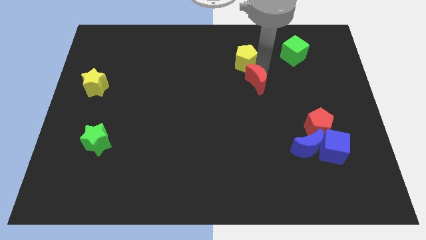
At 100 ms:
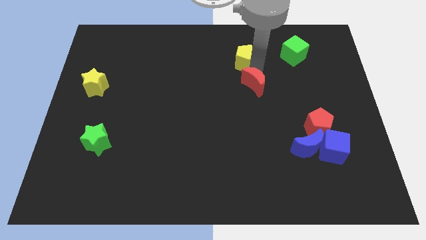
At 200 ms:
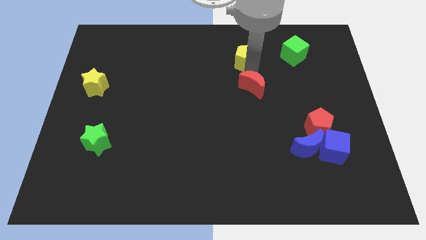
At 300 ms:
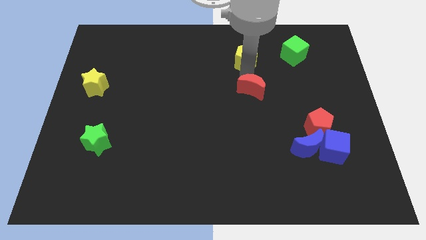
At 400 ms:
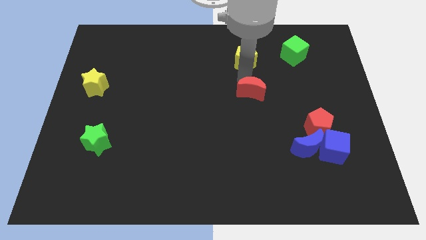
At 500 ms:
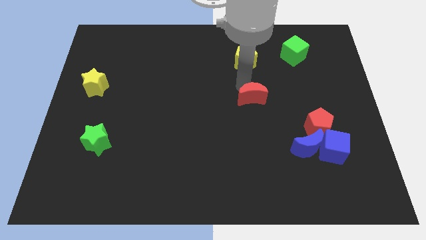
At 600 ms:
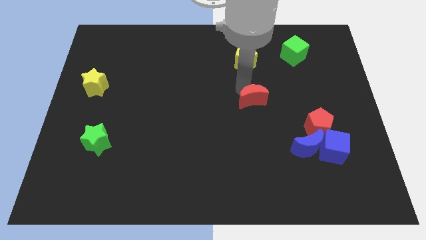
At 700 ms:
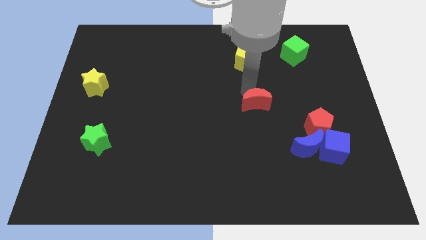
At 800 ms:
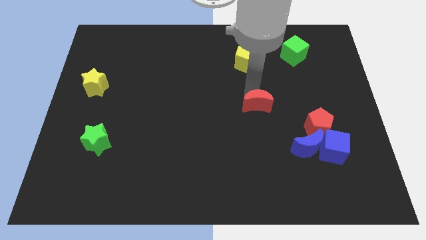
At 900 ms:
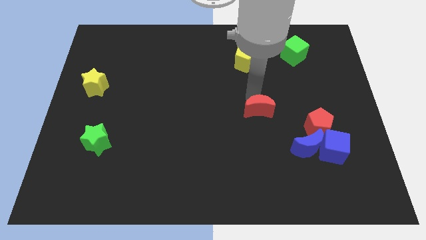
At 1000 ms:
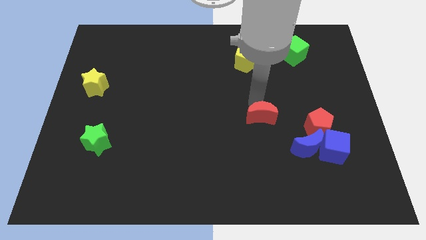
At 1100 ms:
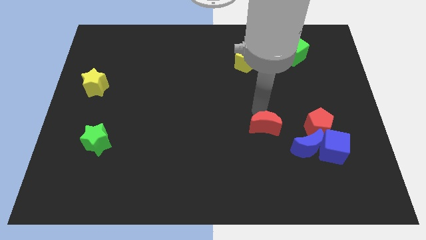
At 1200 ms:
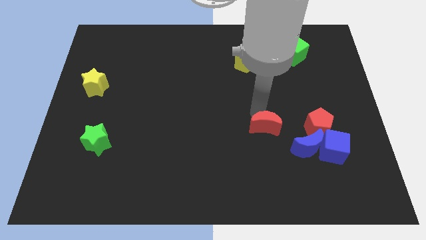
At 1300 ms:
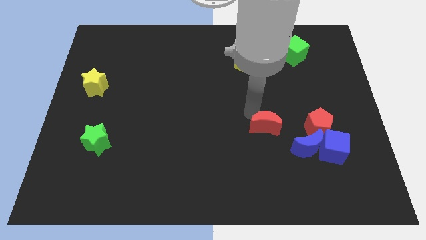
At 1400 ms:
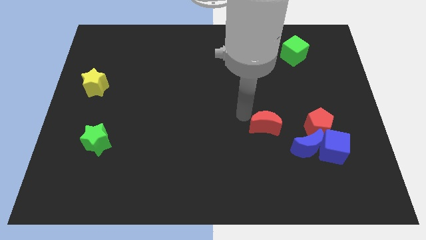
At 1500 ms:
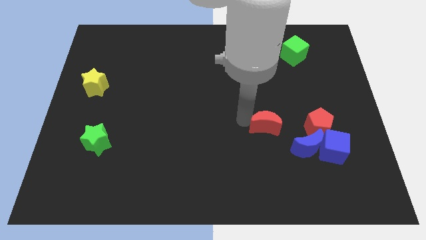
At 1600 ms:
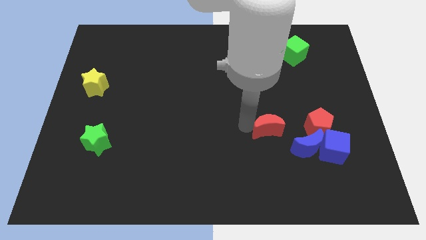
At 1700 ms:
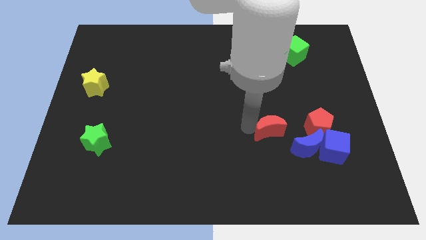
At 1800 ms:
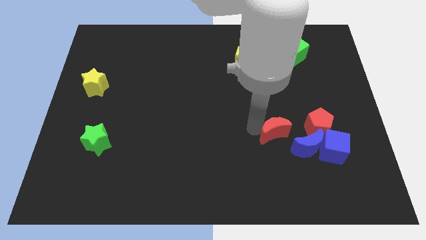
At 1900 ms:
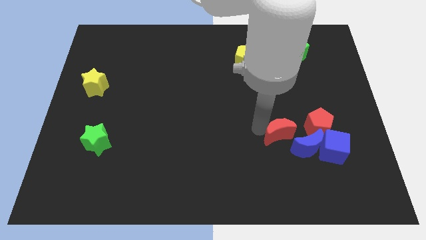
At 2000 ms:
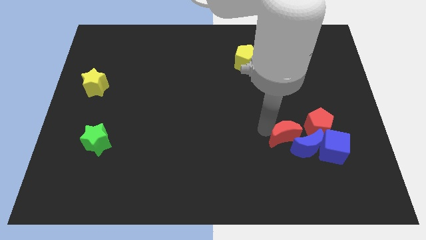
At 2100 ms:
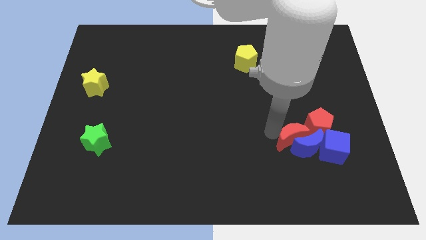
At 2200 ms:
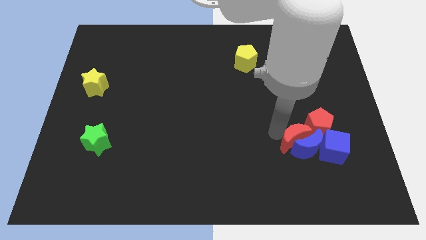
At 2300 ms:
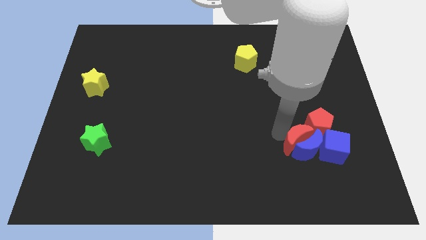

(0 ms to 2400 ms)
move the red moon into blue moon diagonally

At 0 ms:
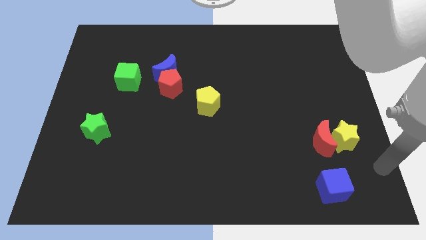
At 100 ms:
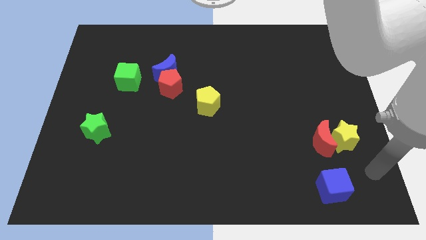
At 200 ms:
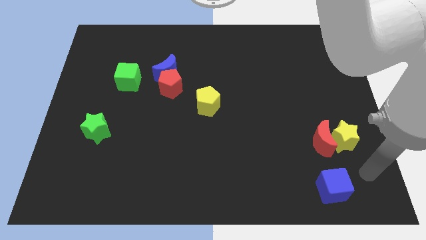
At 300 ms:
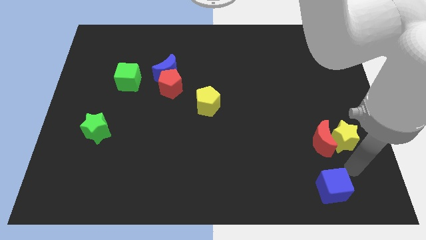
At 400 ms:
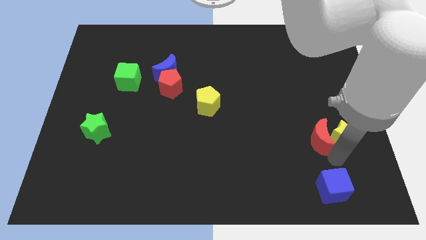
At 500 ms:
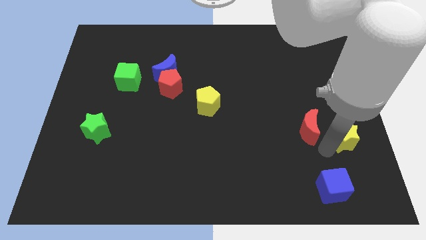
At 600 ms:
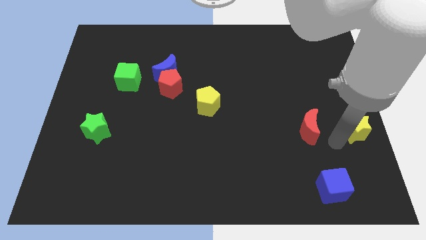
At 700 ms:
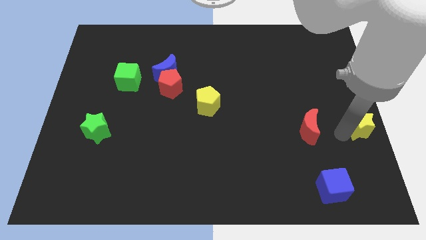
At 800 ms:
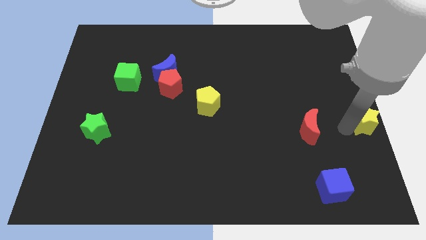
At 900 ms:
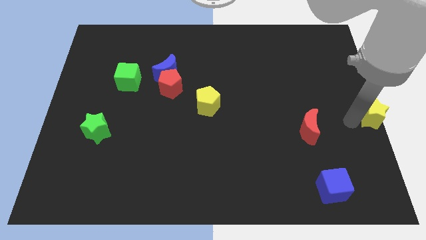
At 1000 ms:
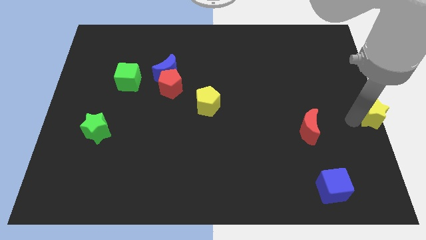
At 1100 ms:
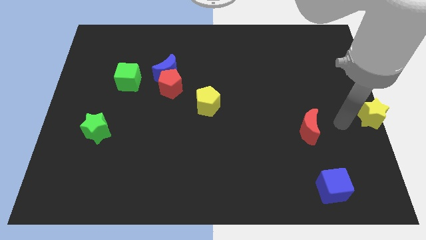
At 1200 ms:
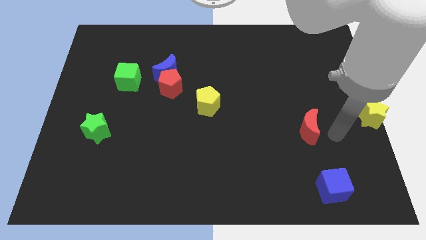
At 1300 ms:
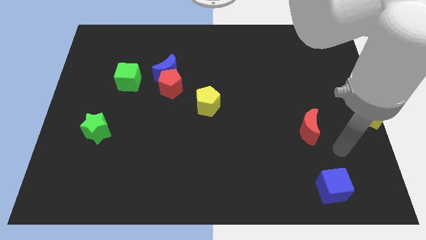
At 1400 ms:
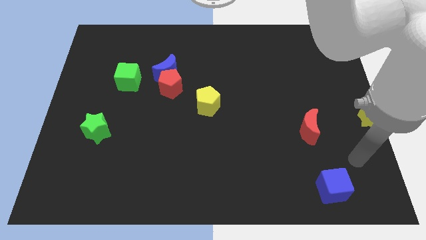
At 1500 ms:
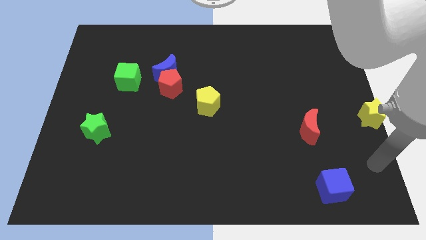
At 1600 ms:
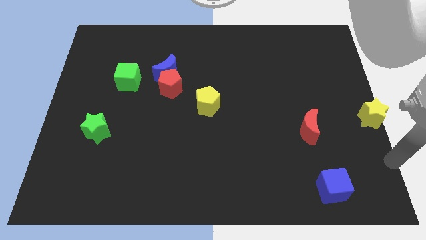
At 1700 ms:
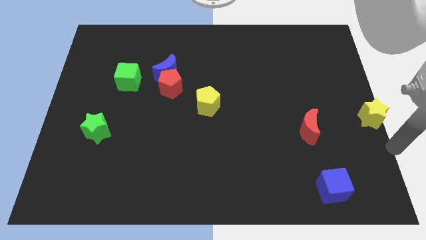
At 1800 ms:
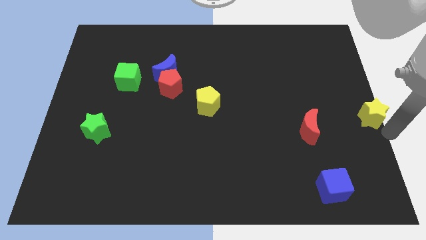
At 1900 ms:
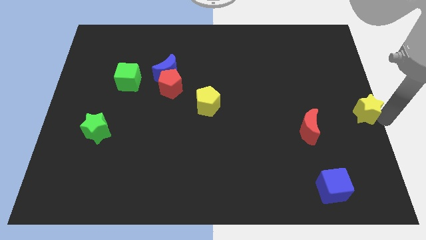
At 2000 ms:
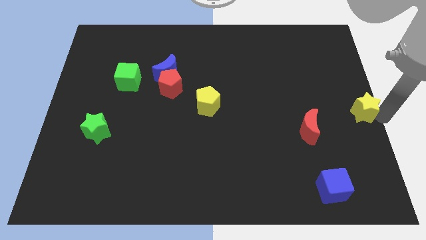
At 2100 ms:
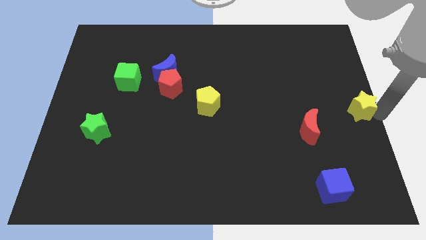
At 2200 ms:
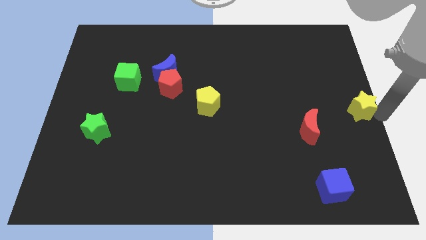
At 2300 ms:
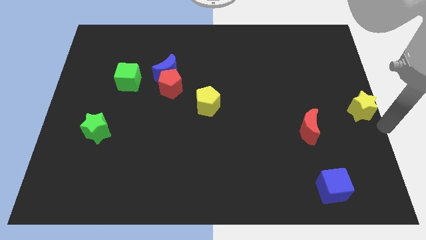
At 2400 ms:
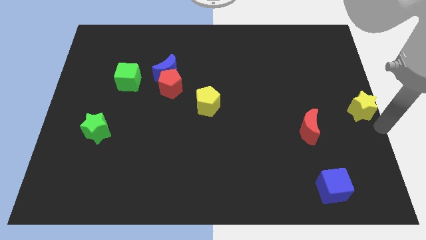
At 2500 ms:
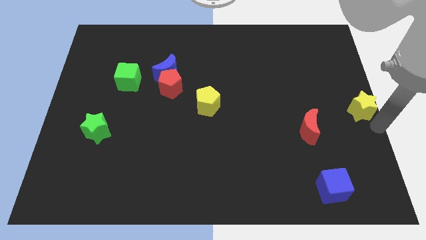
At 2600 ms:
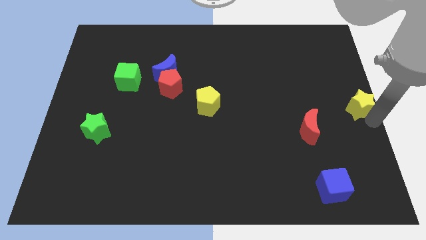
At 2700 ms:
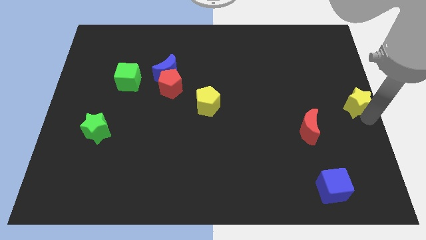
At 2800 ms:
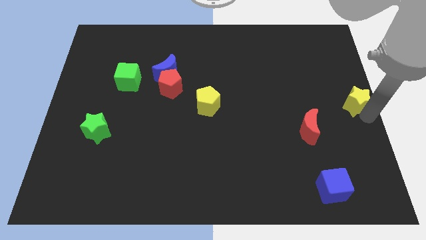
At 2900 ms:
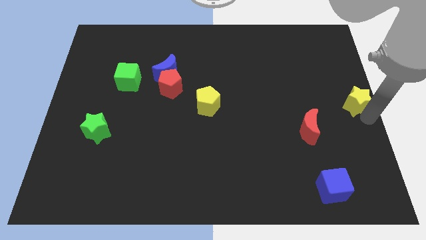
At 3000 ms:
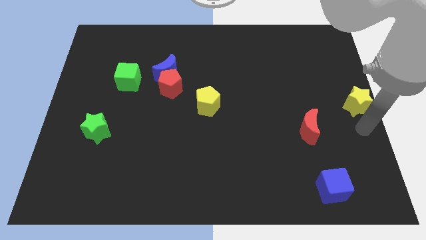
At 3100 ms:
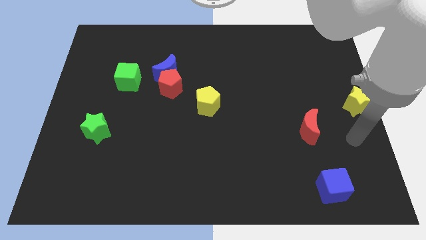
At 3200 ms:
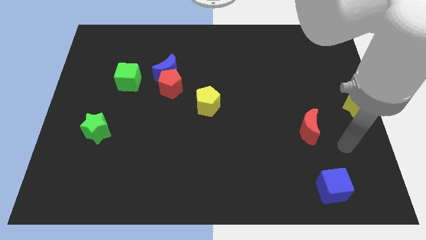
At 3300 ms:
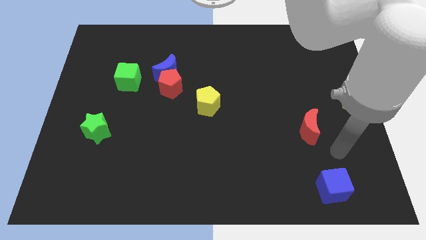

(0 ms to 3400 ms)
separate red crescent and yellow star

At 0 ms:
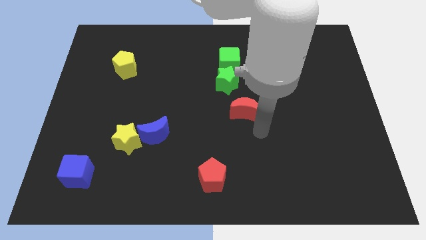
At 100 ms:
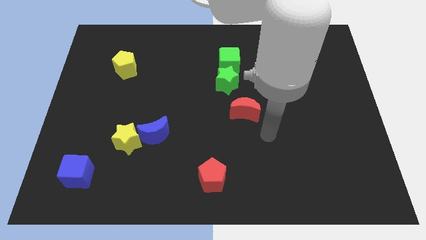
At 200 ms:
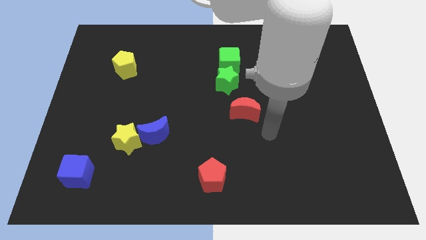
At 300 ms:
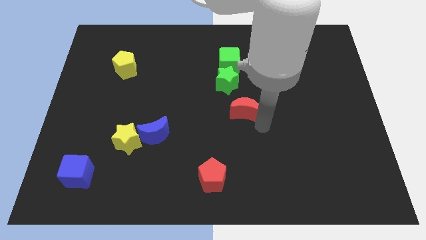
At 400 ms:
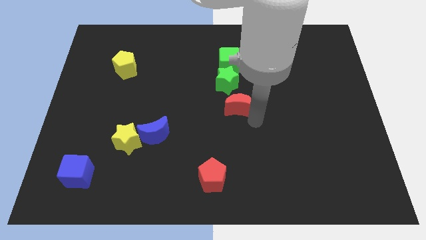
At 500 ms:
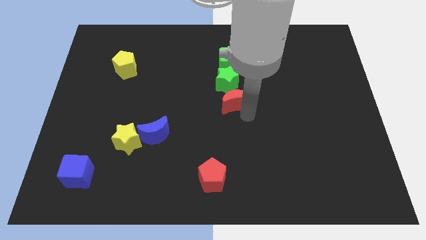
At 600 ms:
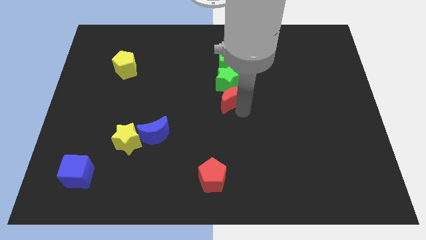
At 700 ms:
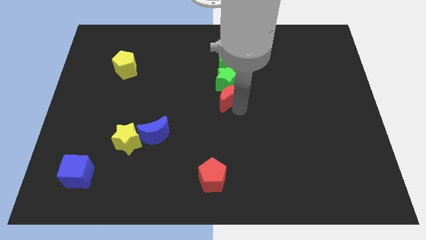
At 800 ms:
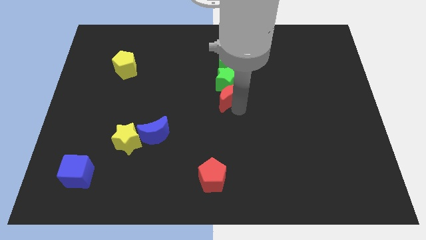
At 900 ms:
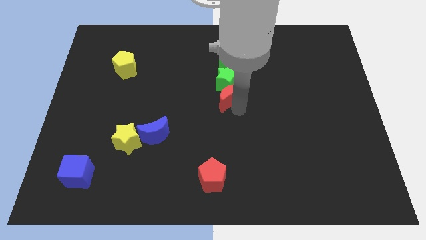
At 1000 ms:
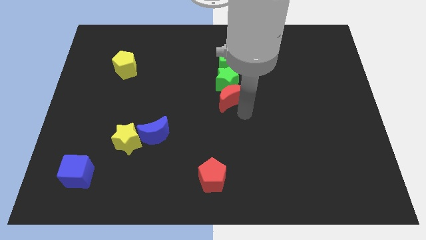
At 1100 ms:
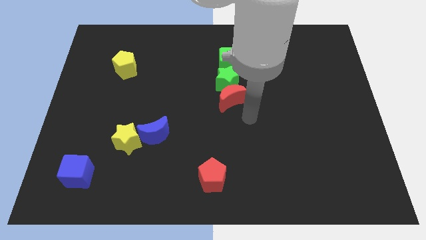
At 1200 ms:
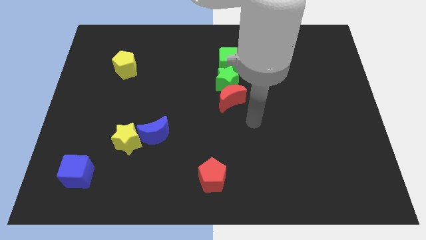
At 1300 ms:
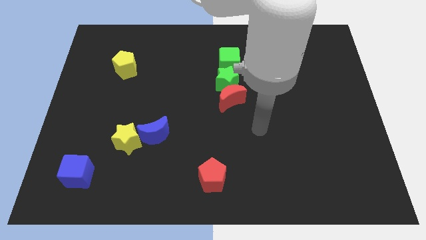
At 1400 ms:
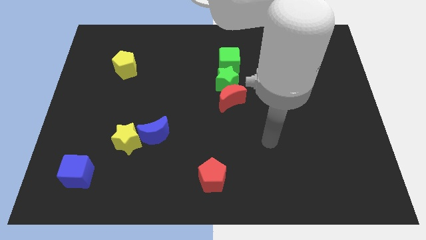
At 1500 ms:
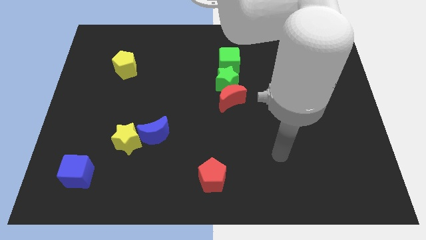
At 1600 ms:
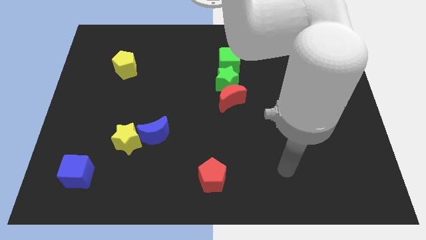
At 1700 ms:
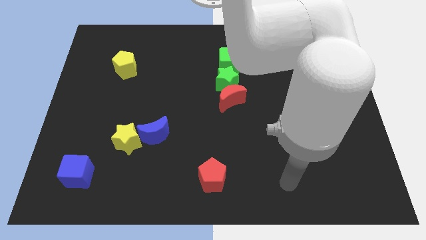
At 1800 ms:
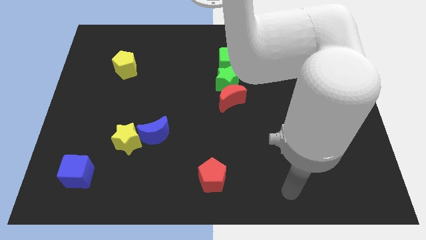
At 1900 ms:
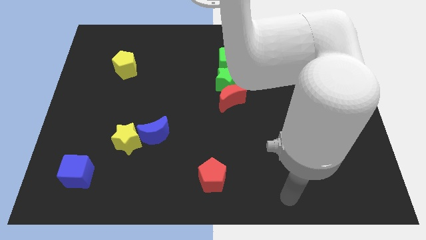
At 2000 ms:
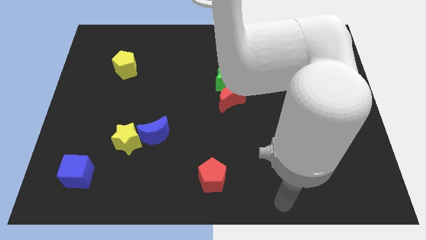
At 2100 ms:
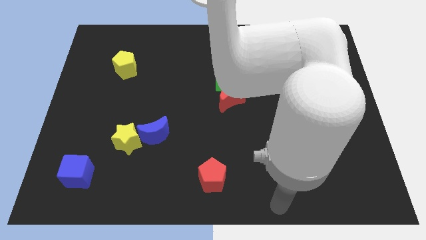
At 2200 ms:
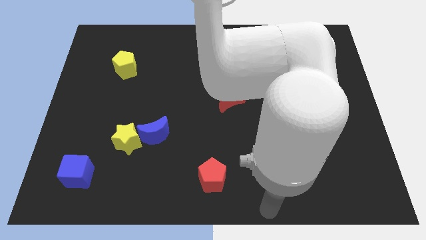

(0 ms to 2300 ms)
put the red crescent underneath the green star

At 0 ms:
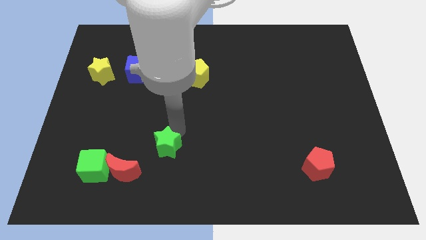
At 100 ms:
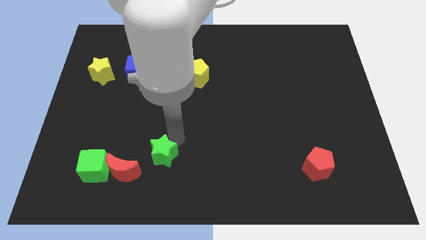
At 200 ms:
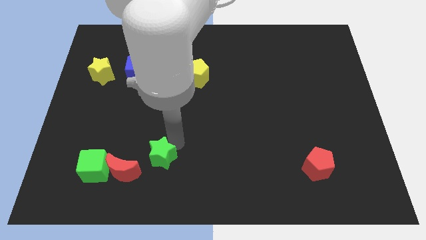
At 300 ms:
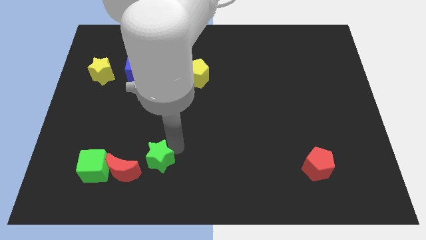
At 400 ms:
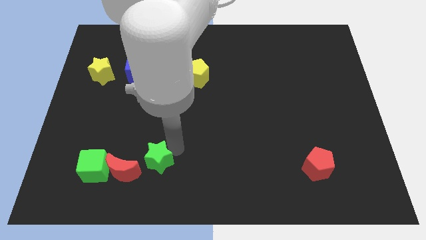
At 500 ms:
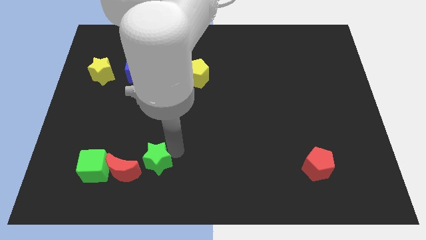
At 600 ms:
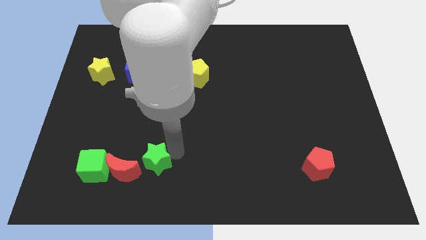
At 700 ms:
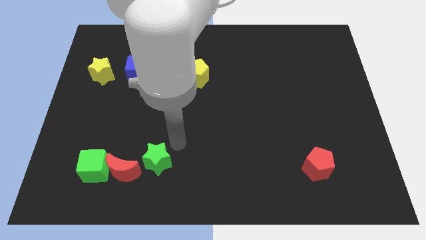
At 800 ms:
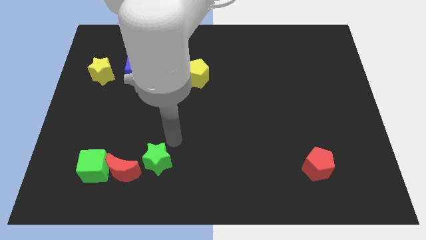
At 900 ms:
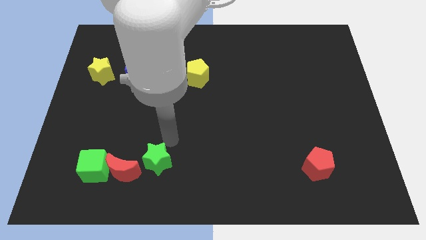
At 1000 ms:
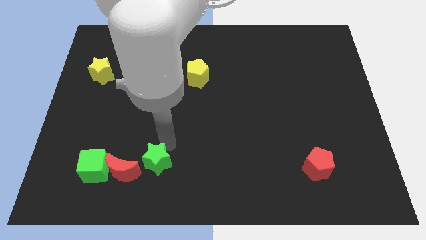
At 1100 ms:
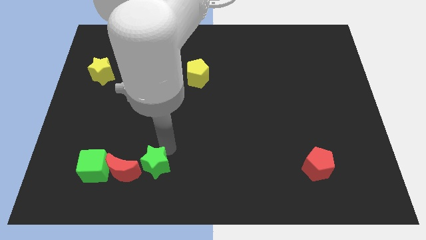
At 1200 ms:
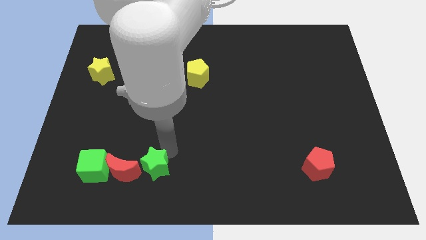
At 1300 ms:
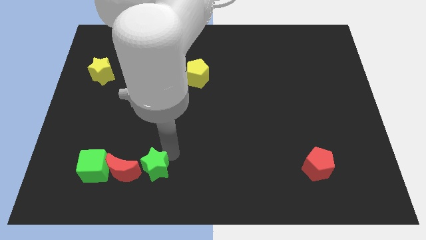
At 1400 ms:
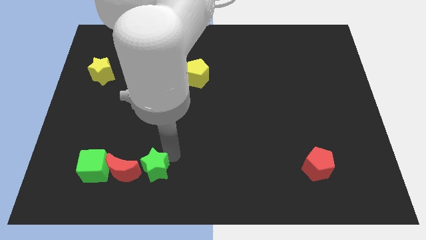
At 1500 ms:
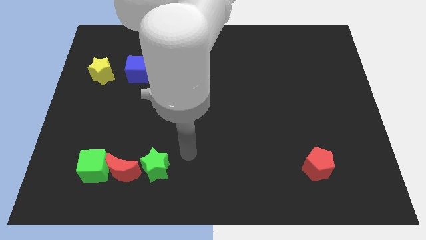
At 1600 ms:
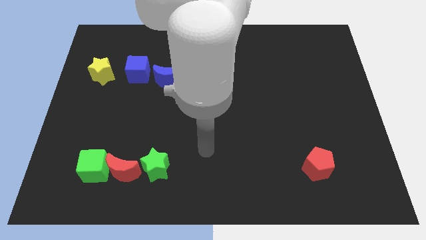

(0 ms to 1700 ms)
move the green star to the right side of the red crescent
